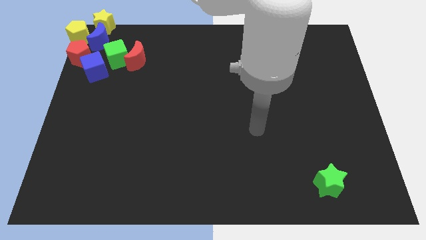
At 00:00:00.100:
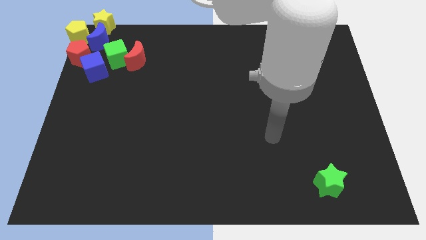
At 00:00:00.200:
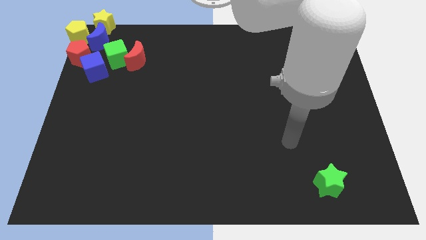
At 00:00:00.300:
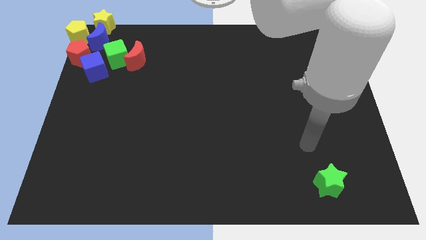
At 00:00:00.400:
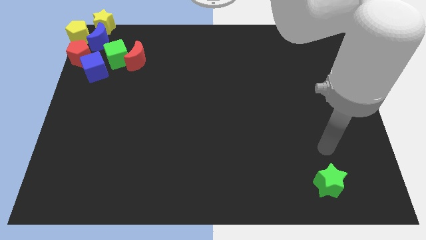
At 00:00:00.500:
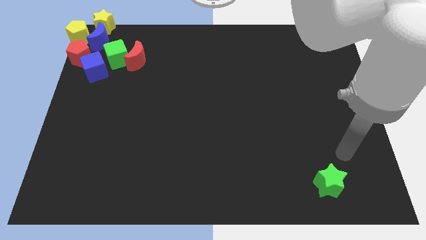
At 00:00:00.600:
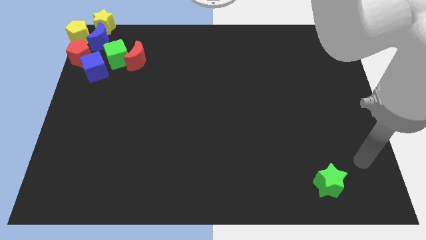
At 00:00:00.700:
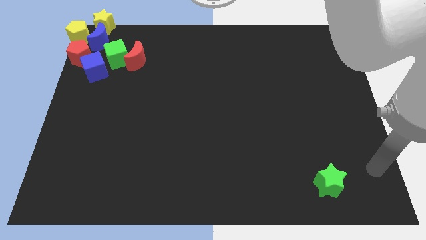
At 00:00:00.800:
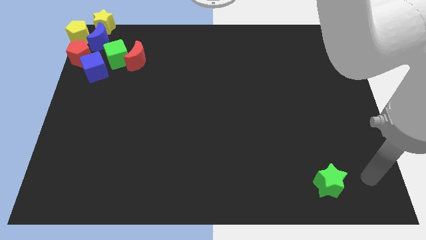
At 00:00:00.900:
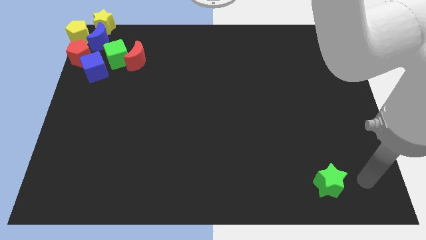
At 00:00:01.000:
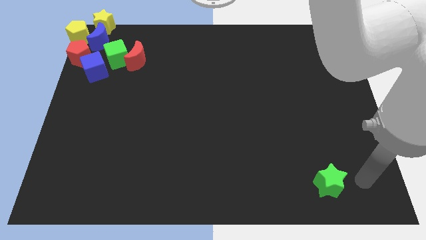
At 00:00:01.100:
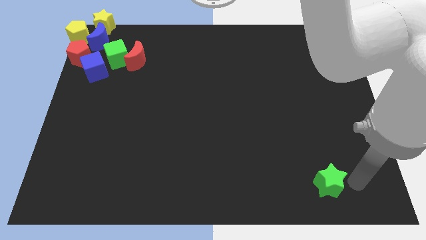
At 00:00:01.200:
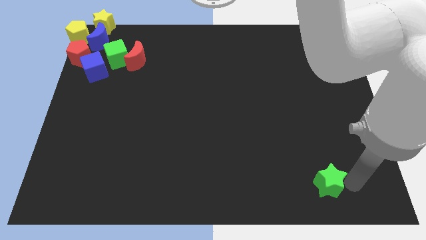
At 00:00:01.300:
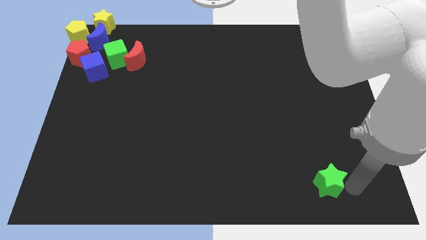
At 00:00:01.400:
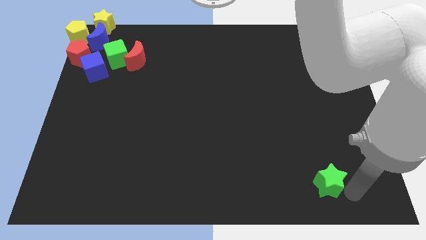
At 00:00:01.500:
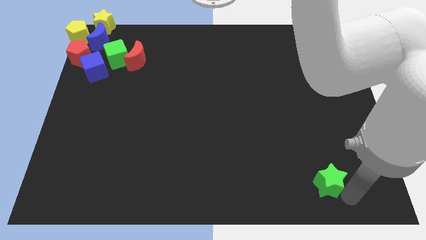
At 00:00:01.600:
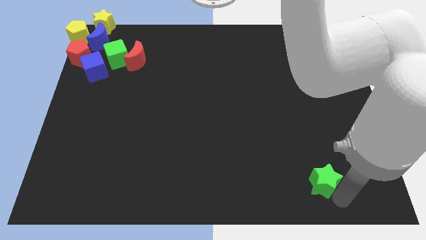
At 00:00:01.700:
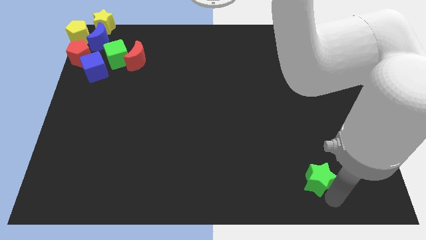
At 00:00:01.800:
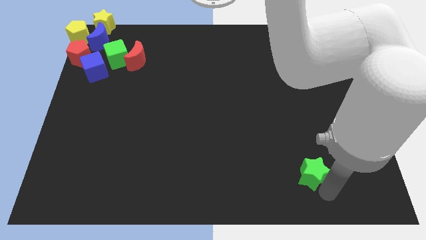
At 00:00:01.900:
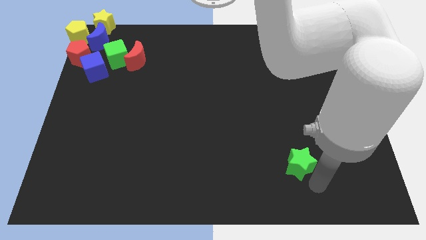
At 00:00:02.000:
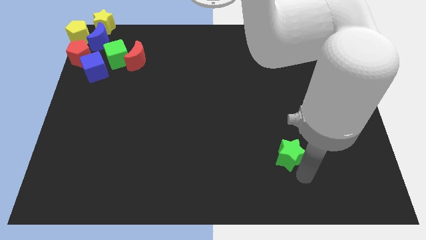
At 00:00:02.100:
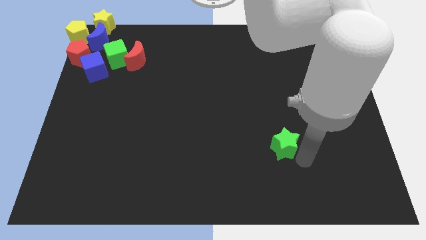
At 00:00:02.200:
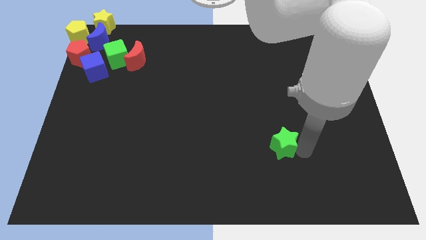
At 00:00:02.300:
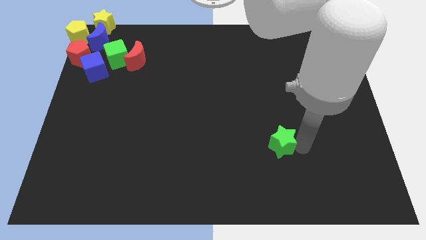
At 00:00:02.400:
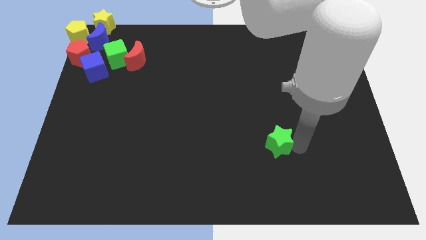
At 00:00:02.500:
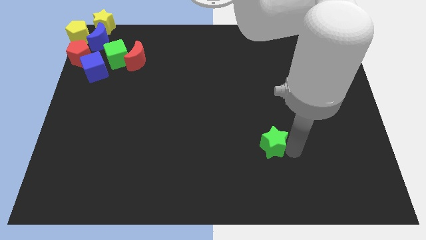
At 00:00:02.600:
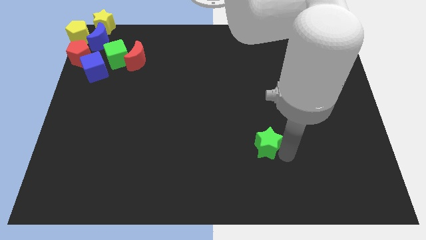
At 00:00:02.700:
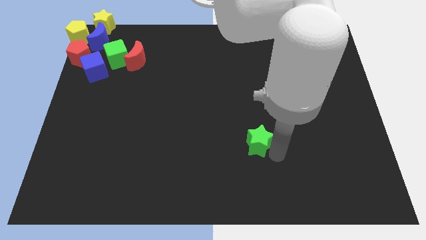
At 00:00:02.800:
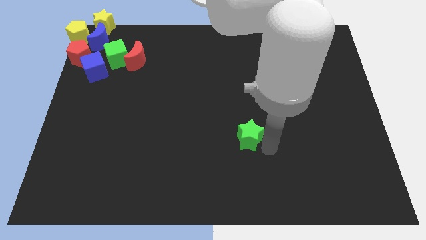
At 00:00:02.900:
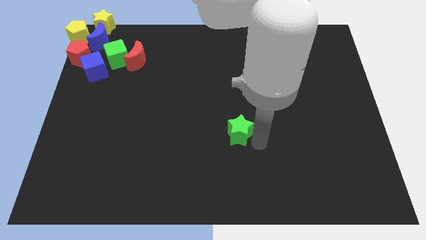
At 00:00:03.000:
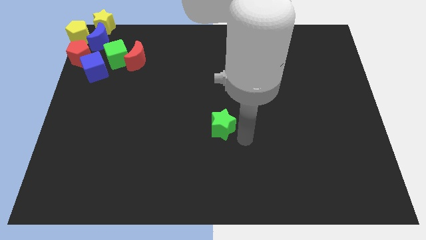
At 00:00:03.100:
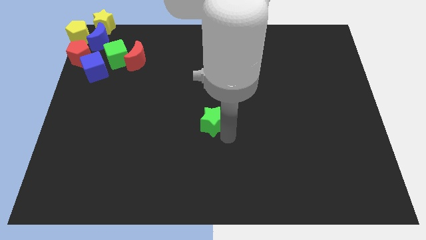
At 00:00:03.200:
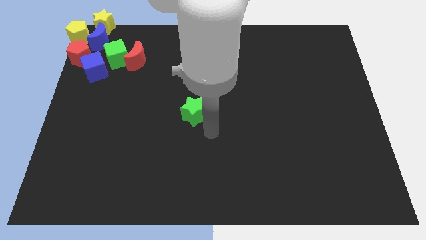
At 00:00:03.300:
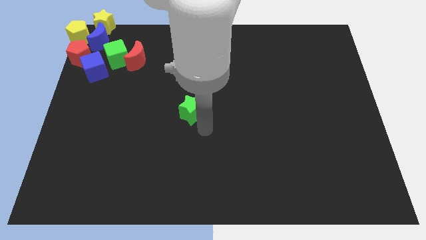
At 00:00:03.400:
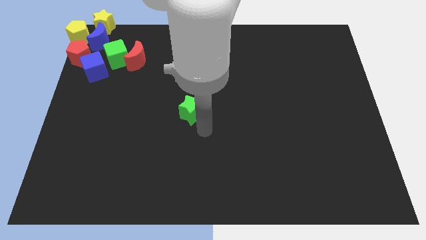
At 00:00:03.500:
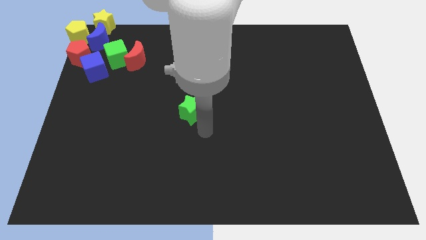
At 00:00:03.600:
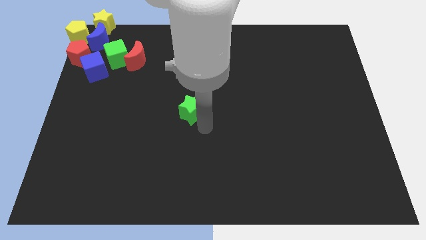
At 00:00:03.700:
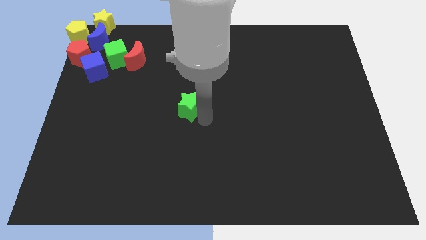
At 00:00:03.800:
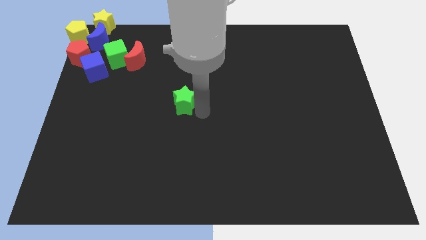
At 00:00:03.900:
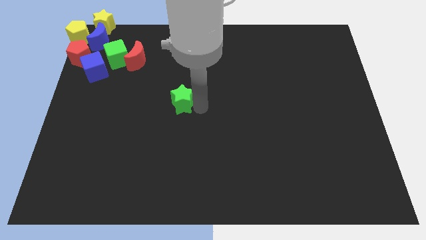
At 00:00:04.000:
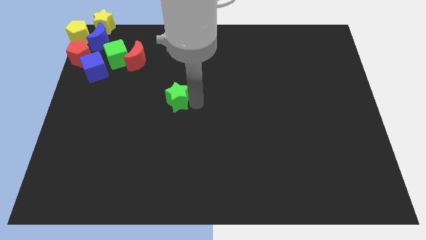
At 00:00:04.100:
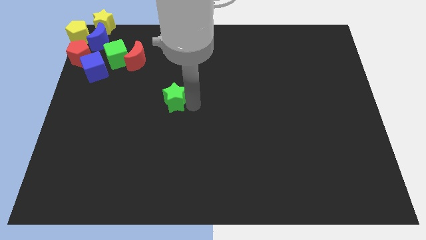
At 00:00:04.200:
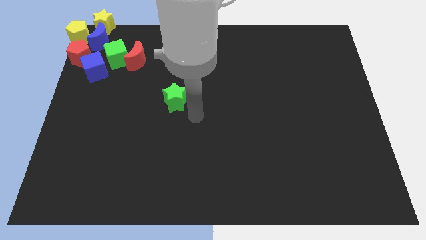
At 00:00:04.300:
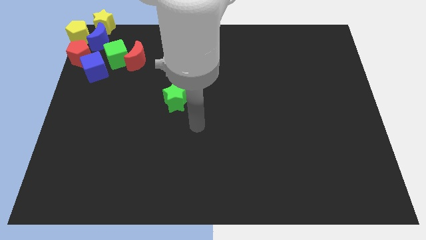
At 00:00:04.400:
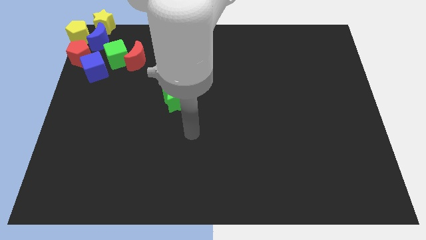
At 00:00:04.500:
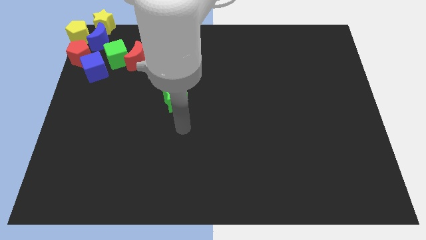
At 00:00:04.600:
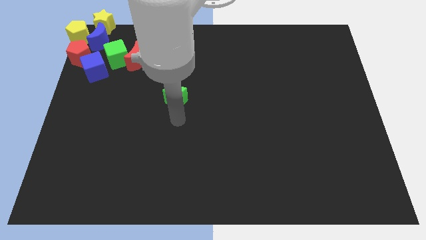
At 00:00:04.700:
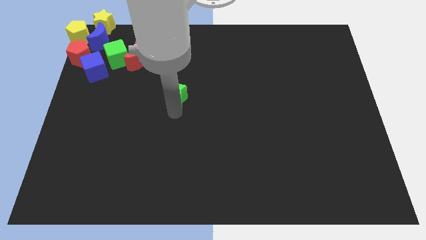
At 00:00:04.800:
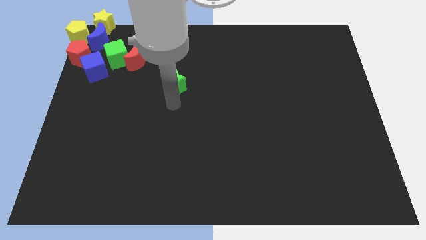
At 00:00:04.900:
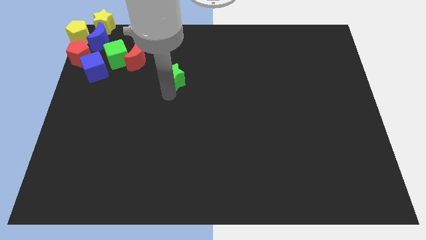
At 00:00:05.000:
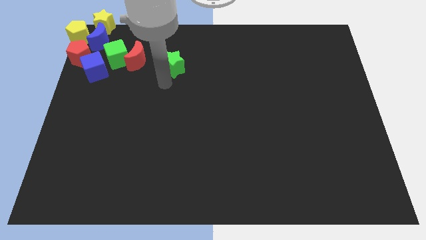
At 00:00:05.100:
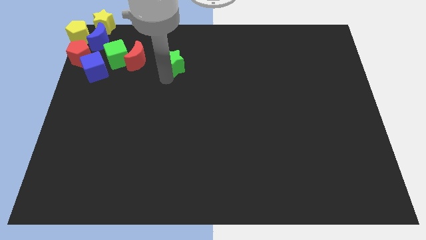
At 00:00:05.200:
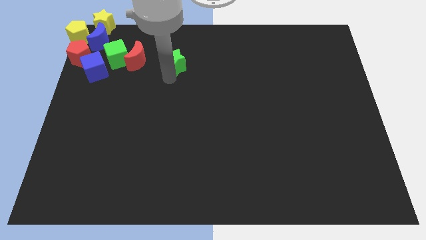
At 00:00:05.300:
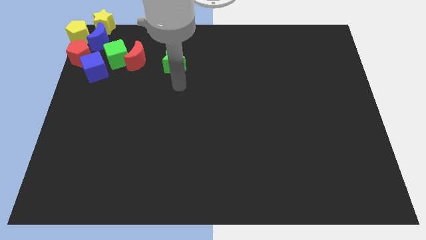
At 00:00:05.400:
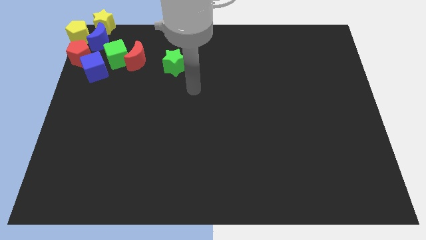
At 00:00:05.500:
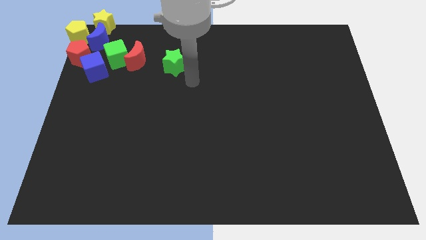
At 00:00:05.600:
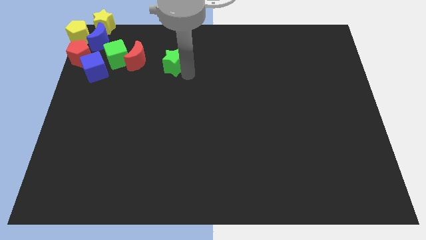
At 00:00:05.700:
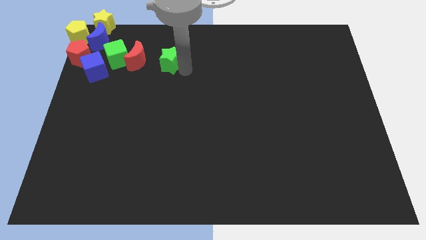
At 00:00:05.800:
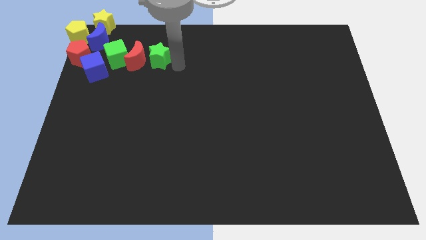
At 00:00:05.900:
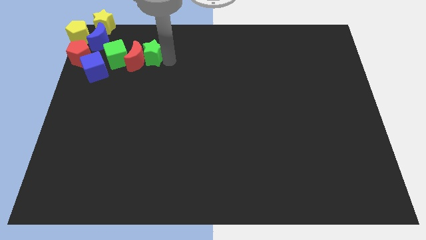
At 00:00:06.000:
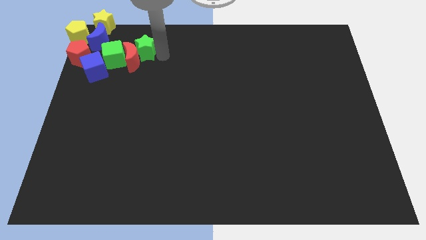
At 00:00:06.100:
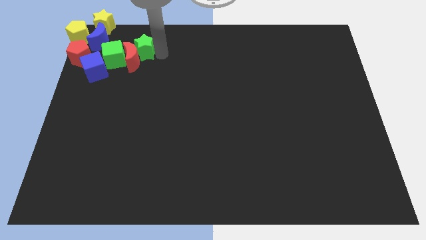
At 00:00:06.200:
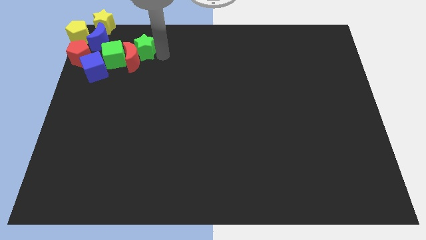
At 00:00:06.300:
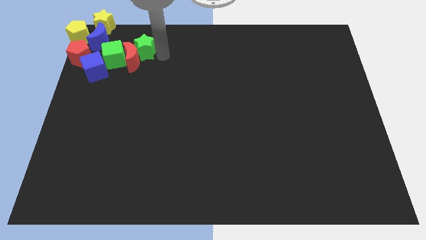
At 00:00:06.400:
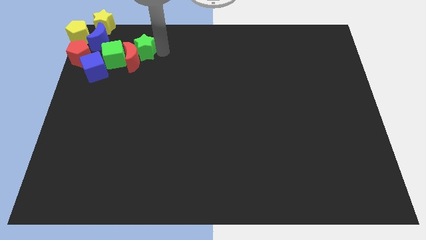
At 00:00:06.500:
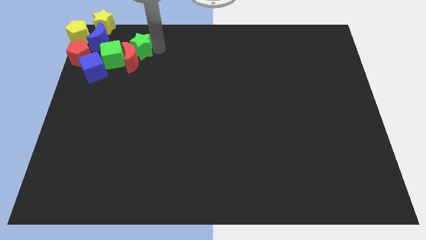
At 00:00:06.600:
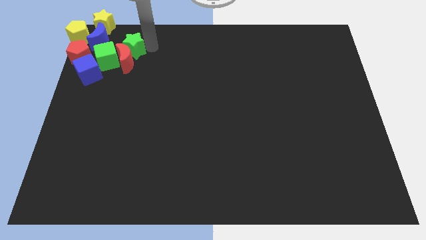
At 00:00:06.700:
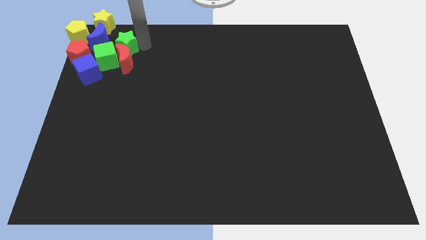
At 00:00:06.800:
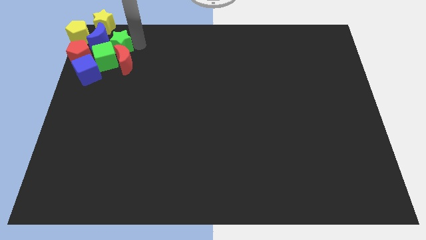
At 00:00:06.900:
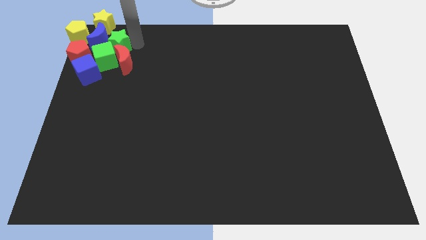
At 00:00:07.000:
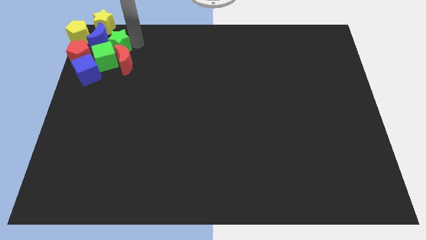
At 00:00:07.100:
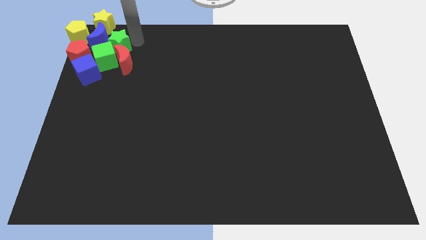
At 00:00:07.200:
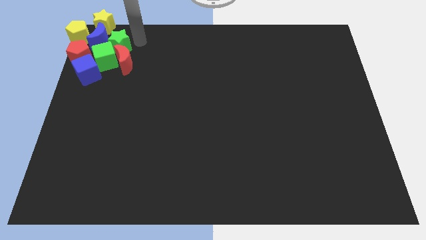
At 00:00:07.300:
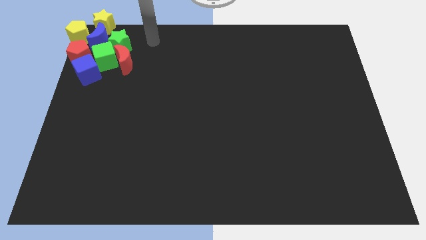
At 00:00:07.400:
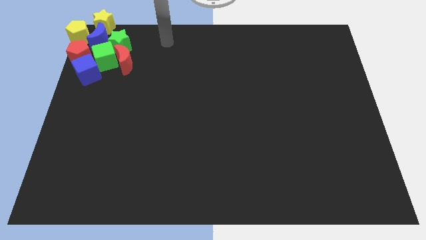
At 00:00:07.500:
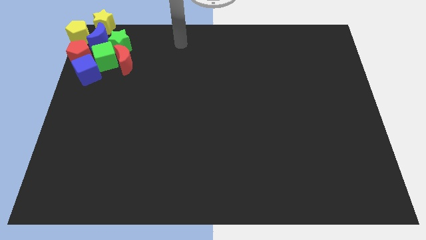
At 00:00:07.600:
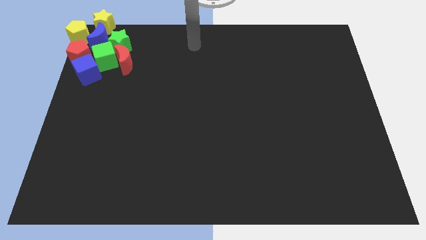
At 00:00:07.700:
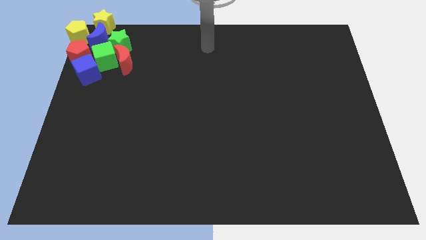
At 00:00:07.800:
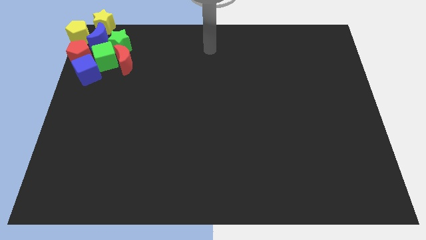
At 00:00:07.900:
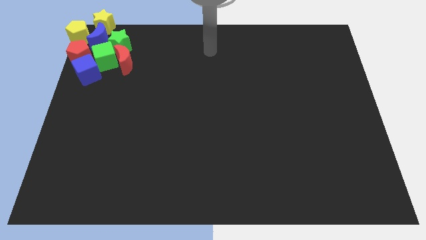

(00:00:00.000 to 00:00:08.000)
push the green star towards the group of blocks

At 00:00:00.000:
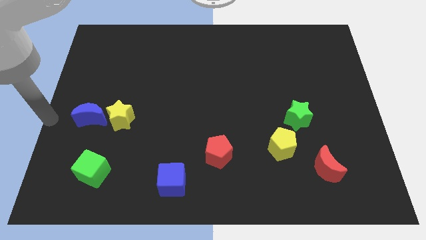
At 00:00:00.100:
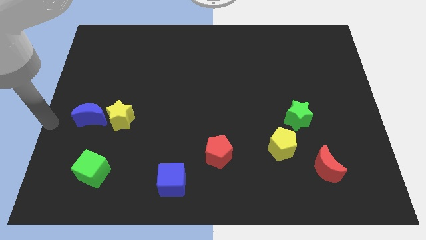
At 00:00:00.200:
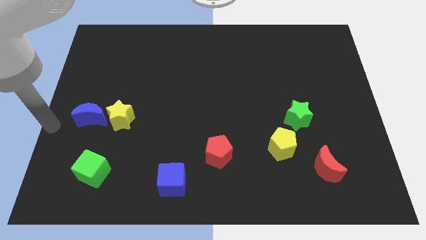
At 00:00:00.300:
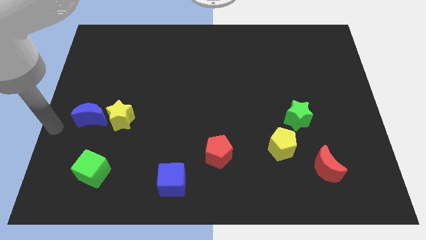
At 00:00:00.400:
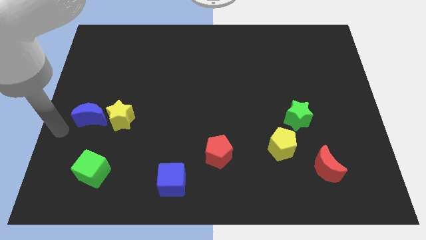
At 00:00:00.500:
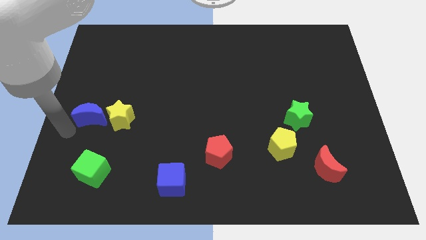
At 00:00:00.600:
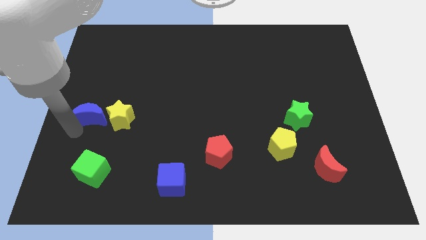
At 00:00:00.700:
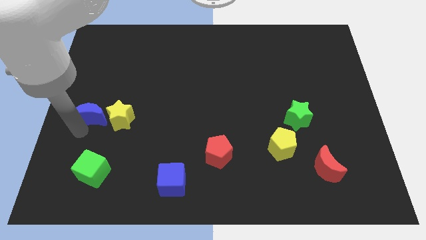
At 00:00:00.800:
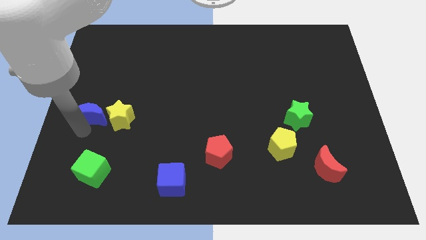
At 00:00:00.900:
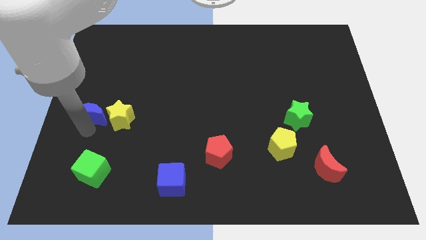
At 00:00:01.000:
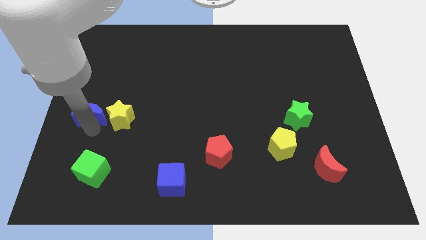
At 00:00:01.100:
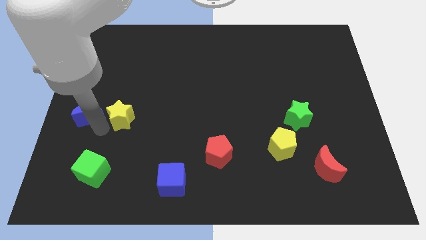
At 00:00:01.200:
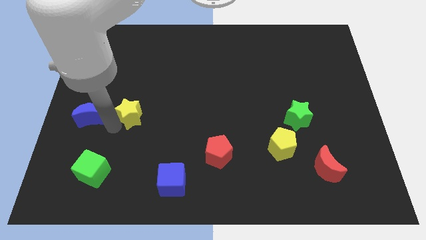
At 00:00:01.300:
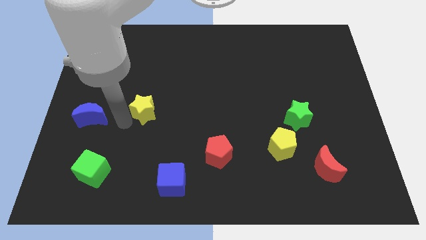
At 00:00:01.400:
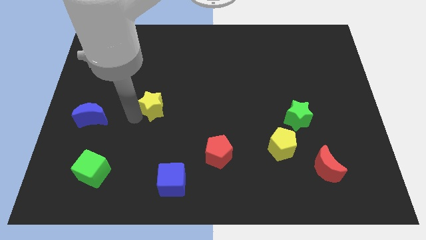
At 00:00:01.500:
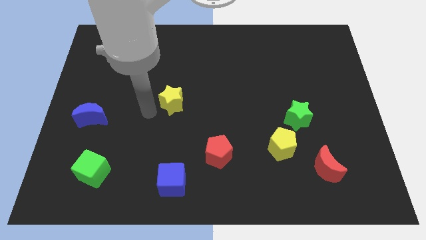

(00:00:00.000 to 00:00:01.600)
separate the yellow star from blue moon
